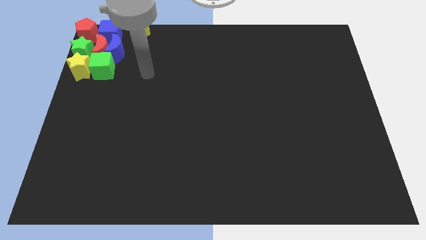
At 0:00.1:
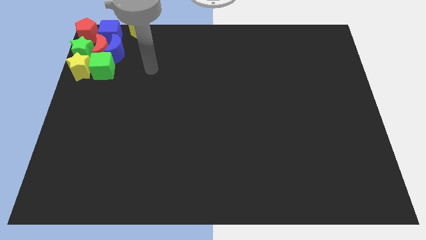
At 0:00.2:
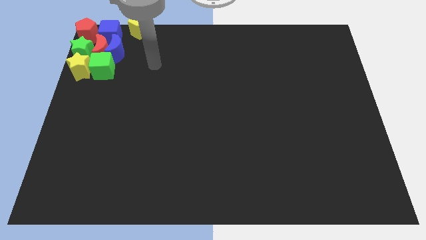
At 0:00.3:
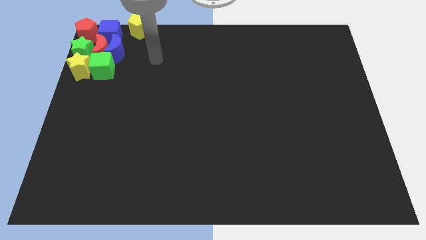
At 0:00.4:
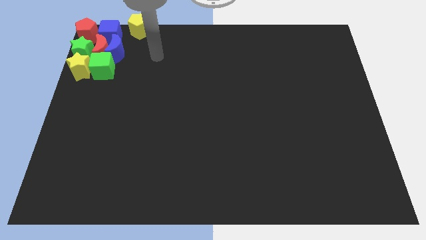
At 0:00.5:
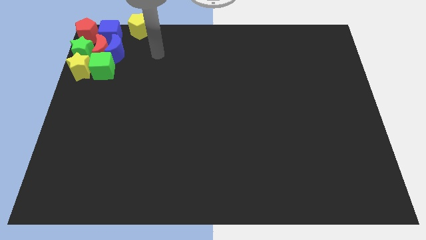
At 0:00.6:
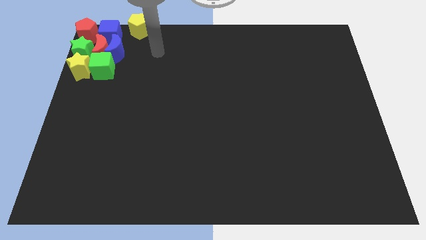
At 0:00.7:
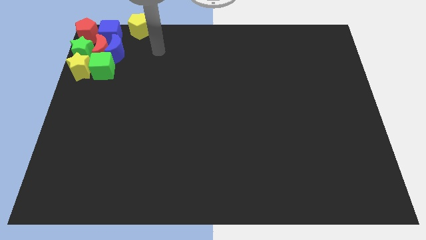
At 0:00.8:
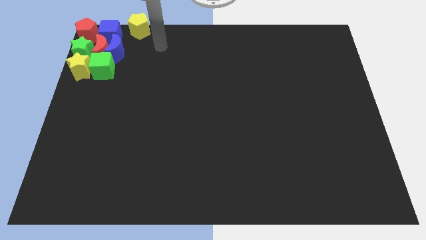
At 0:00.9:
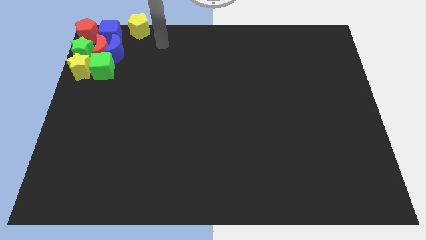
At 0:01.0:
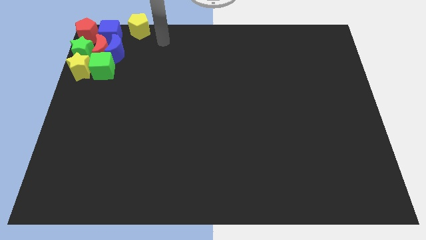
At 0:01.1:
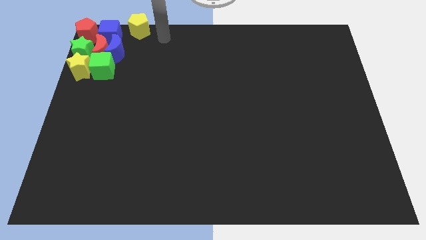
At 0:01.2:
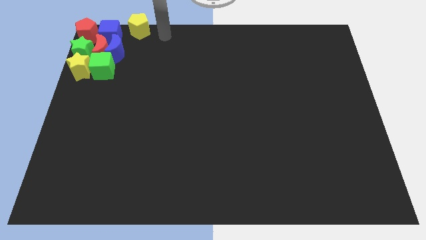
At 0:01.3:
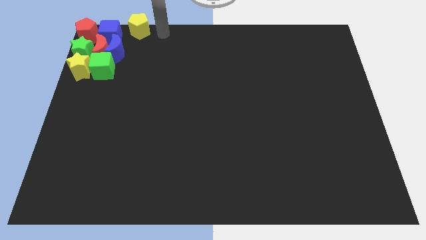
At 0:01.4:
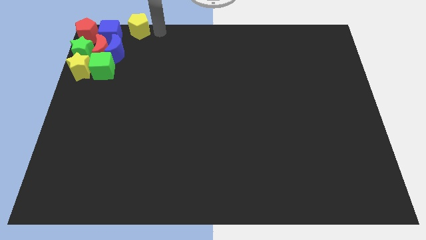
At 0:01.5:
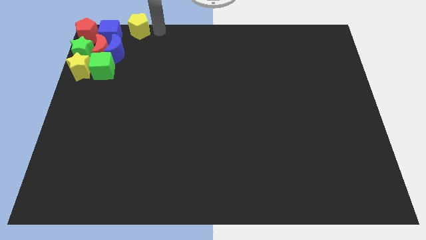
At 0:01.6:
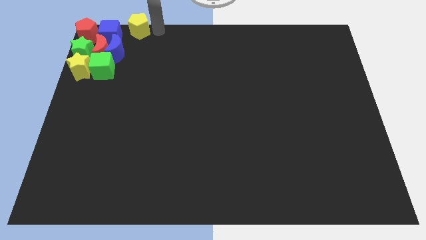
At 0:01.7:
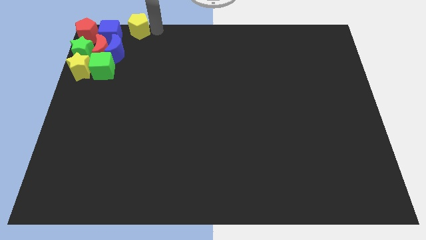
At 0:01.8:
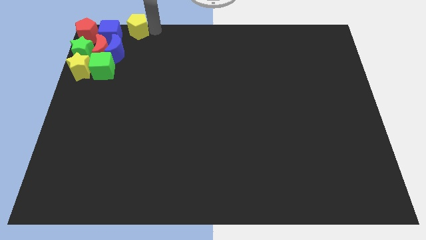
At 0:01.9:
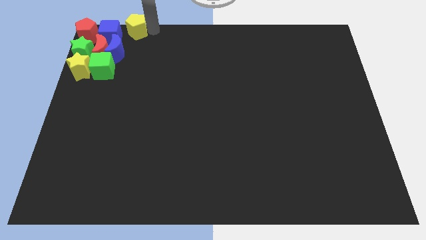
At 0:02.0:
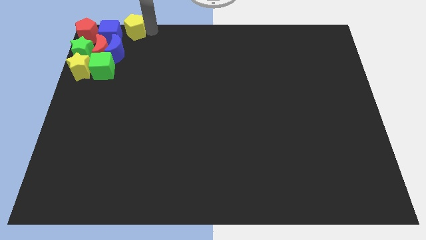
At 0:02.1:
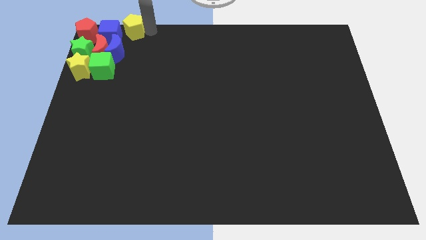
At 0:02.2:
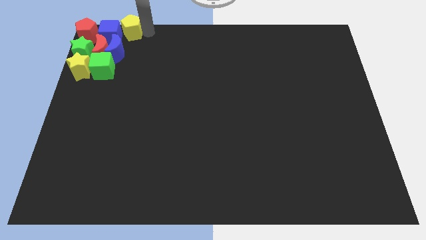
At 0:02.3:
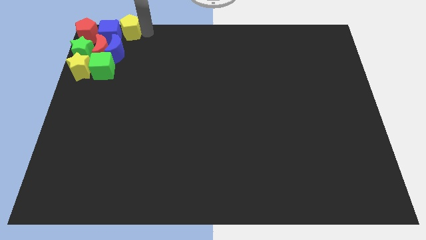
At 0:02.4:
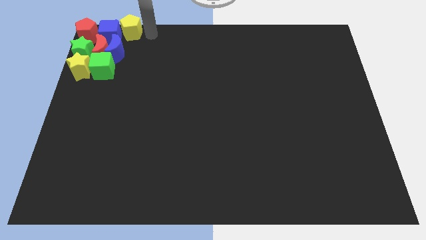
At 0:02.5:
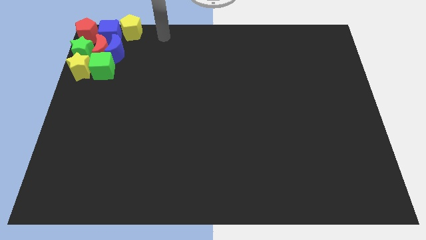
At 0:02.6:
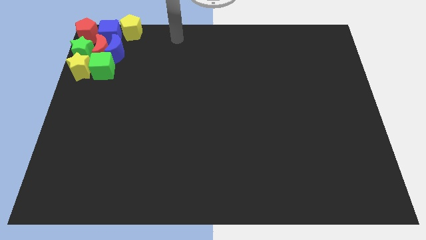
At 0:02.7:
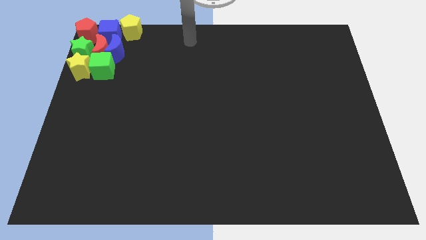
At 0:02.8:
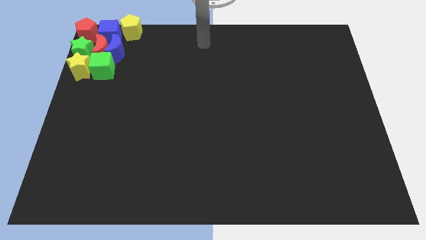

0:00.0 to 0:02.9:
move the yellow pentagon into the blue cube

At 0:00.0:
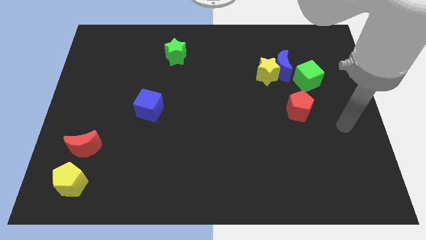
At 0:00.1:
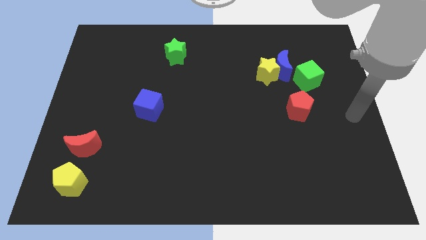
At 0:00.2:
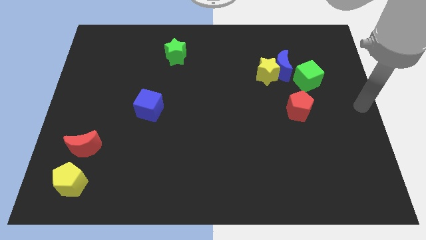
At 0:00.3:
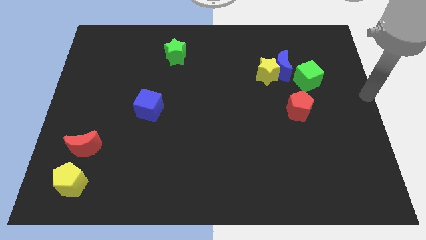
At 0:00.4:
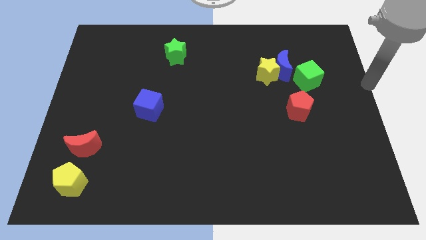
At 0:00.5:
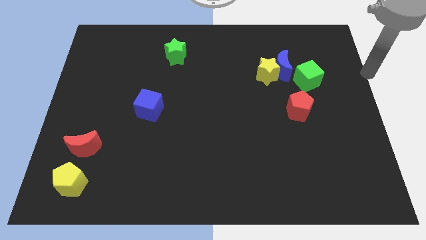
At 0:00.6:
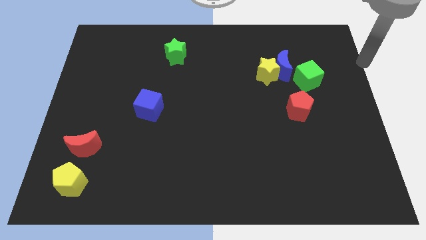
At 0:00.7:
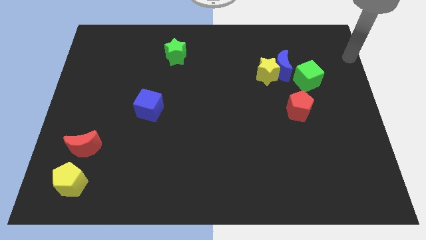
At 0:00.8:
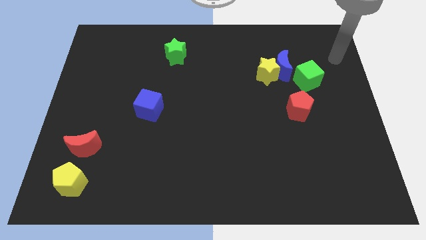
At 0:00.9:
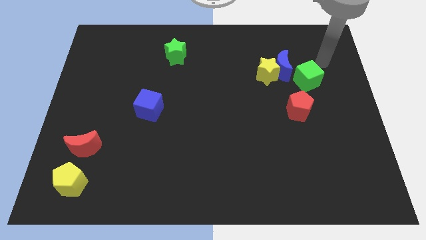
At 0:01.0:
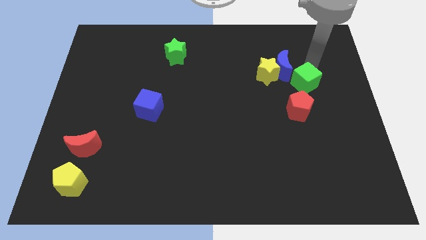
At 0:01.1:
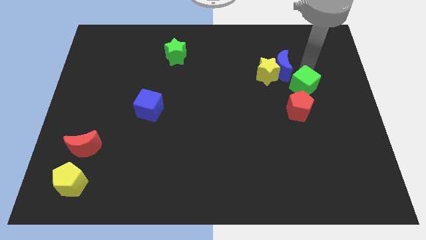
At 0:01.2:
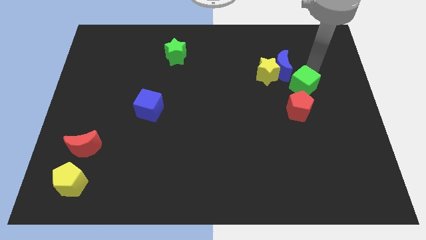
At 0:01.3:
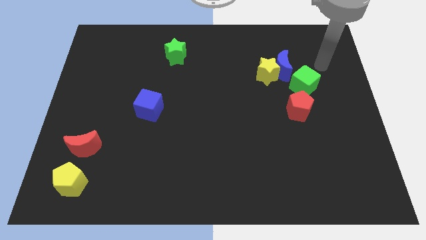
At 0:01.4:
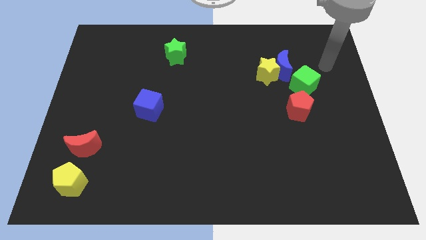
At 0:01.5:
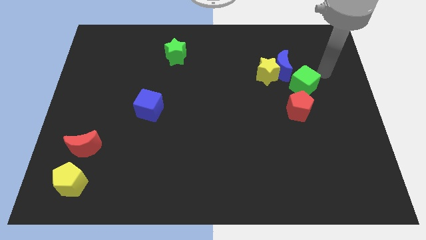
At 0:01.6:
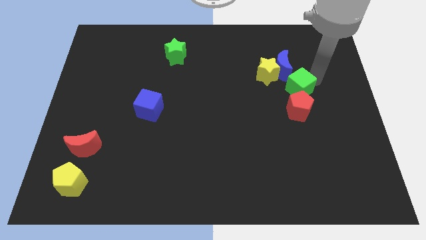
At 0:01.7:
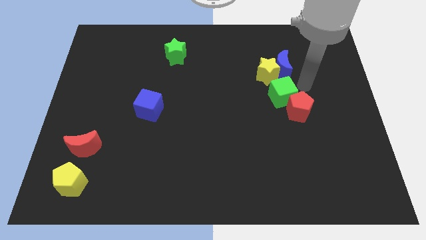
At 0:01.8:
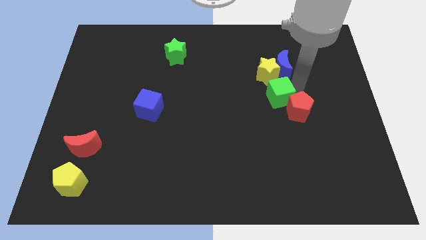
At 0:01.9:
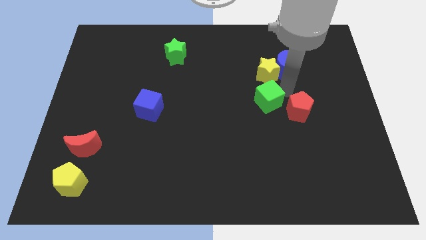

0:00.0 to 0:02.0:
put the green cube below the yellow star

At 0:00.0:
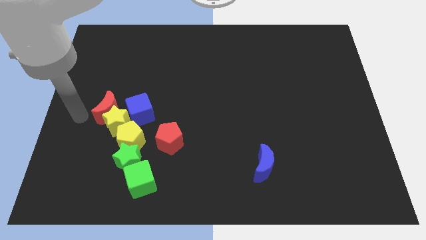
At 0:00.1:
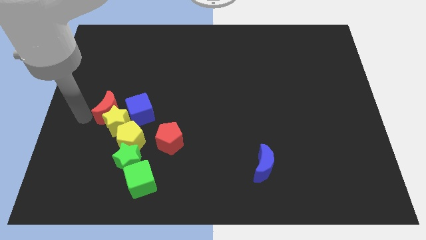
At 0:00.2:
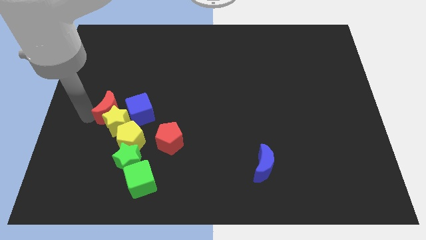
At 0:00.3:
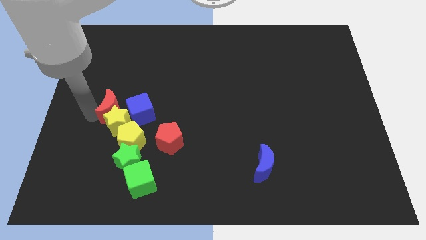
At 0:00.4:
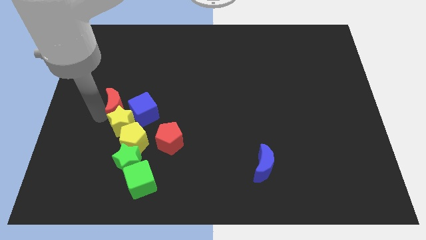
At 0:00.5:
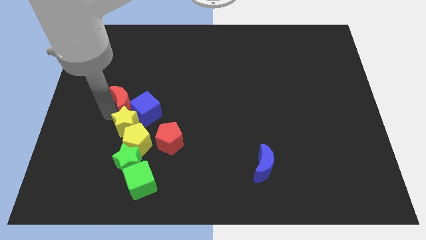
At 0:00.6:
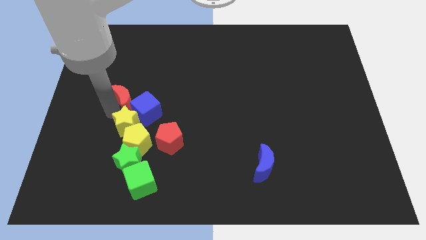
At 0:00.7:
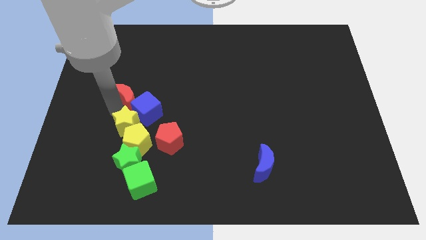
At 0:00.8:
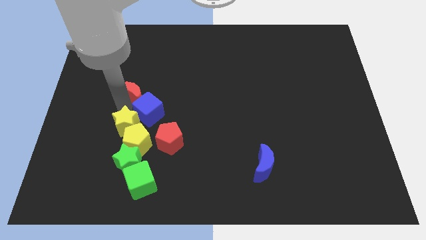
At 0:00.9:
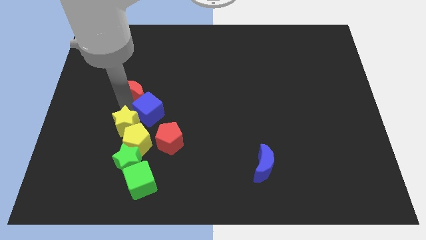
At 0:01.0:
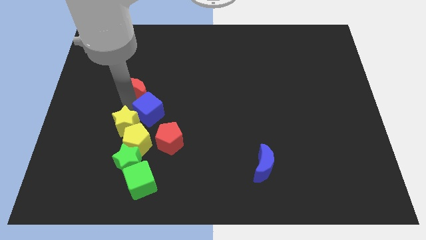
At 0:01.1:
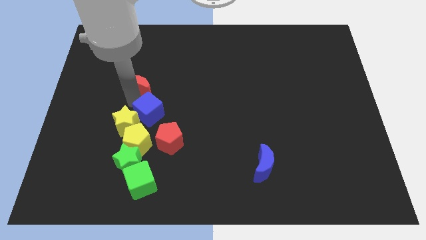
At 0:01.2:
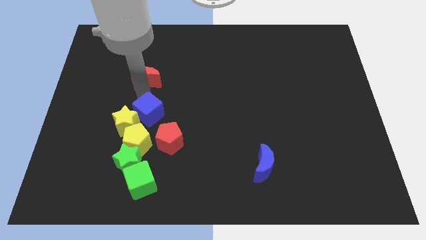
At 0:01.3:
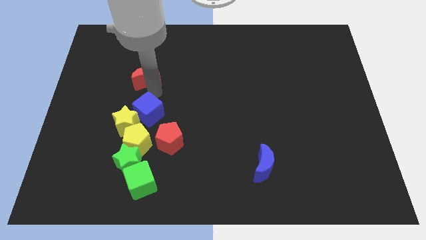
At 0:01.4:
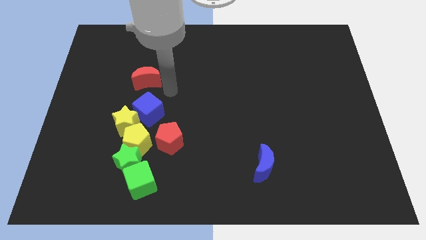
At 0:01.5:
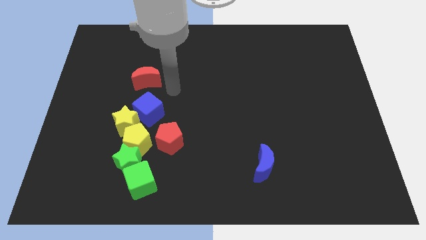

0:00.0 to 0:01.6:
move the red moon above the blue cube

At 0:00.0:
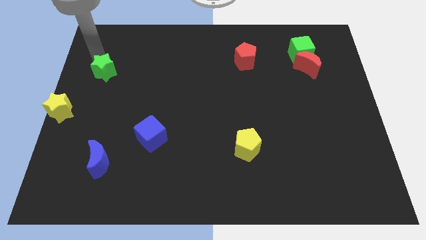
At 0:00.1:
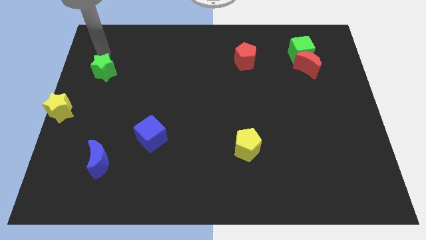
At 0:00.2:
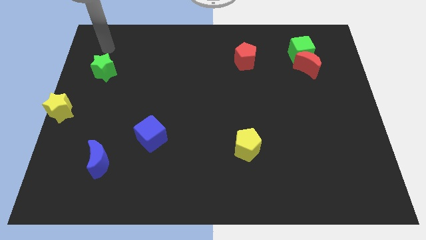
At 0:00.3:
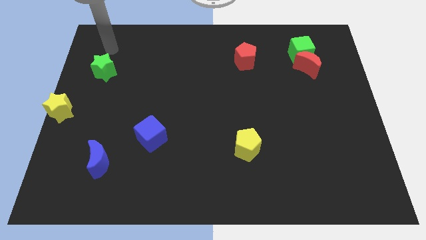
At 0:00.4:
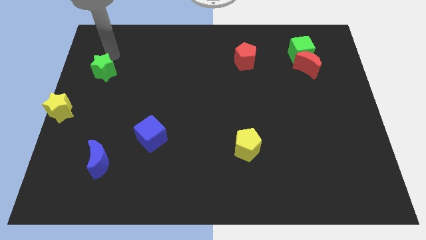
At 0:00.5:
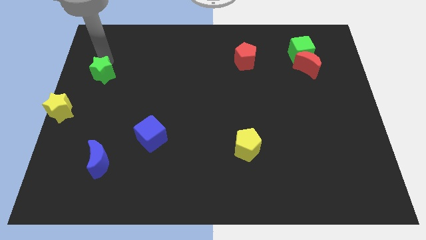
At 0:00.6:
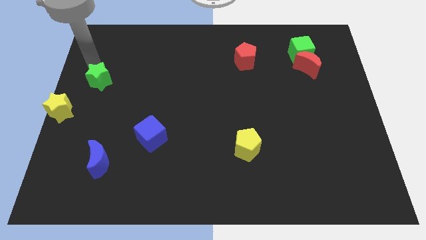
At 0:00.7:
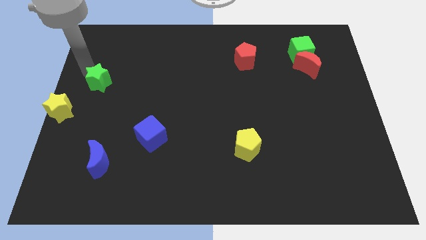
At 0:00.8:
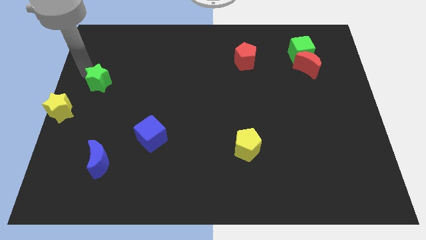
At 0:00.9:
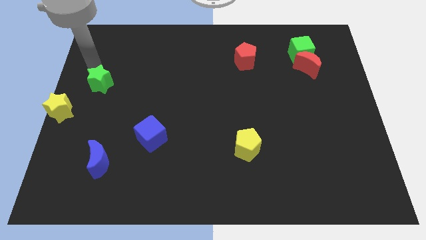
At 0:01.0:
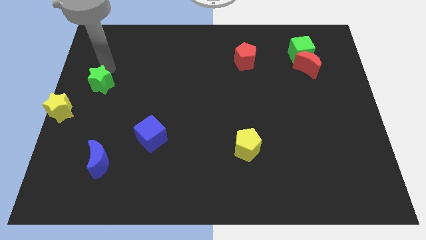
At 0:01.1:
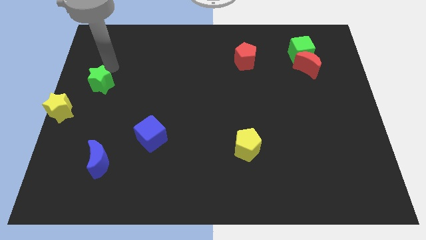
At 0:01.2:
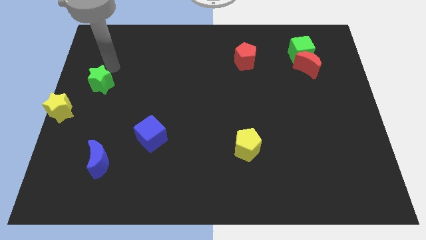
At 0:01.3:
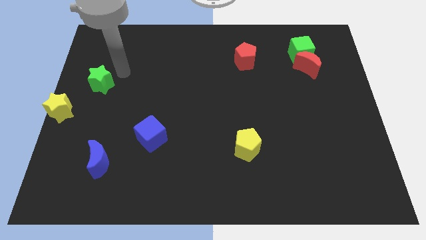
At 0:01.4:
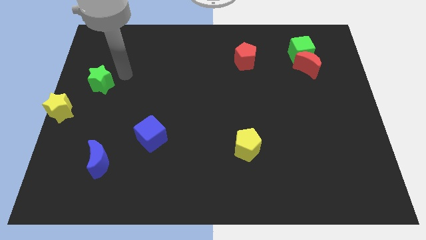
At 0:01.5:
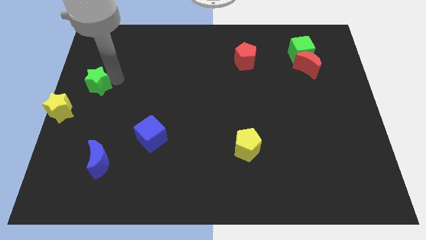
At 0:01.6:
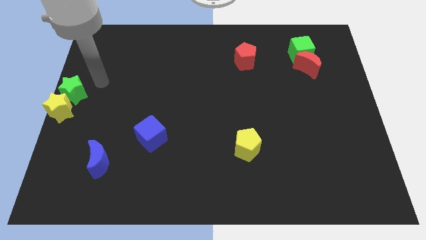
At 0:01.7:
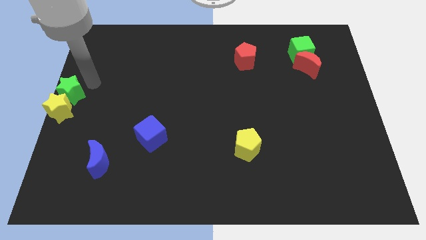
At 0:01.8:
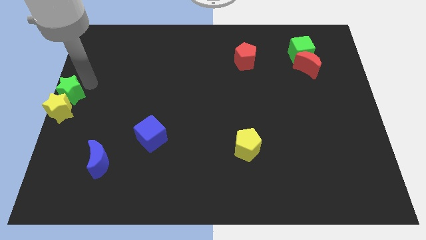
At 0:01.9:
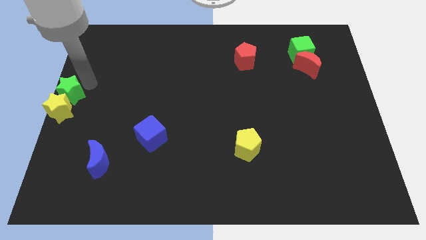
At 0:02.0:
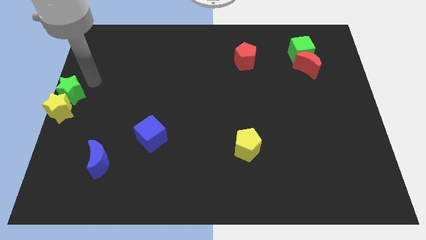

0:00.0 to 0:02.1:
move the green star to the left centre of the board

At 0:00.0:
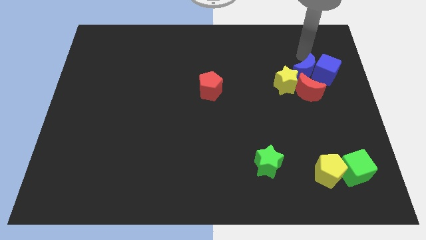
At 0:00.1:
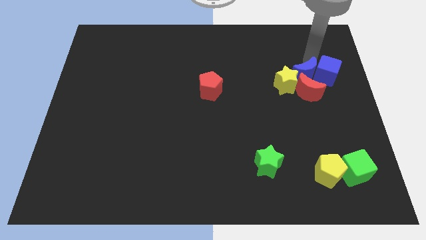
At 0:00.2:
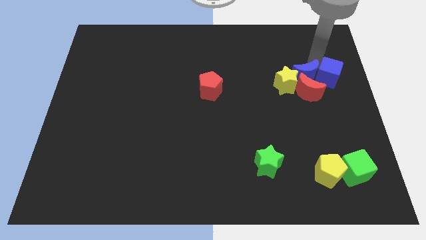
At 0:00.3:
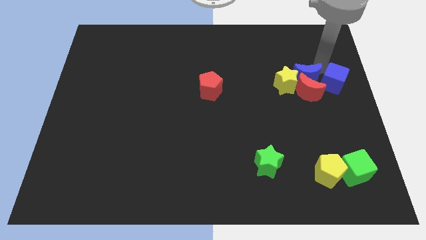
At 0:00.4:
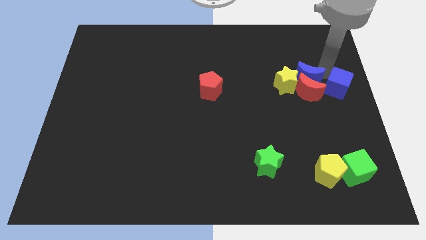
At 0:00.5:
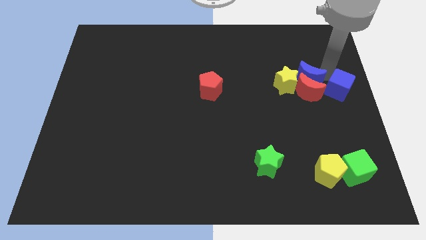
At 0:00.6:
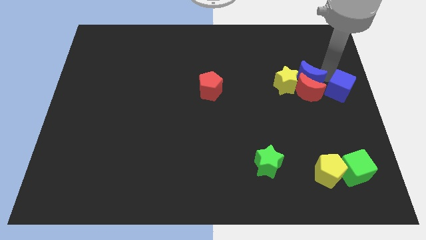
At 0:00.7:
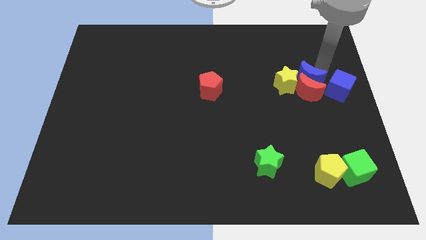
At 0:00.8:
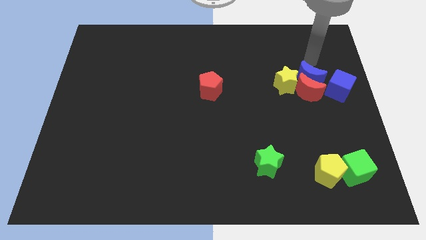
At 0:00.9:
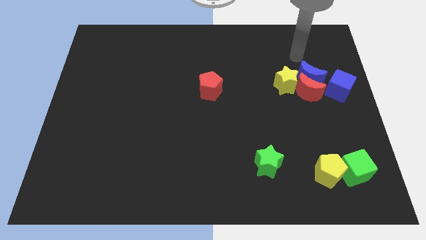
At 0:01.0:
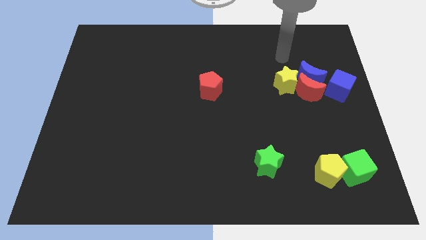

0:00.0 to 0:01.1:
place blue crescent above red crescent
